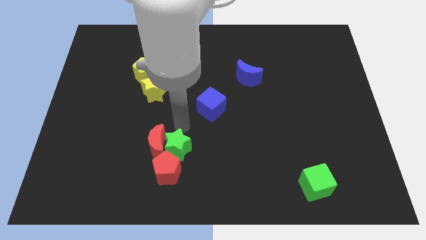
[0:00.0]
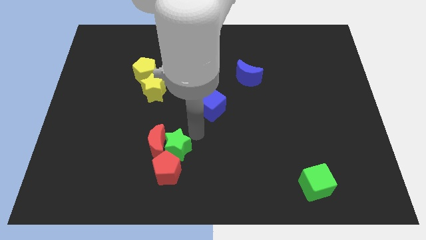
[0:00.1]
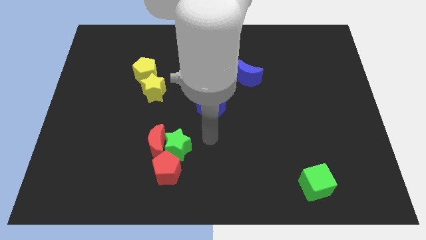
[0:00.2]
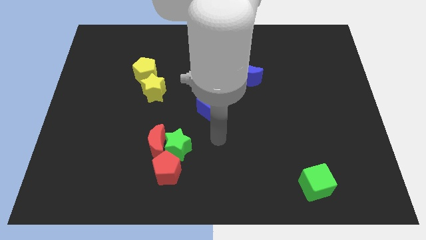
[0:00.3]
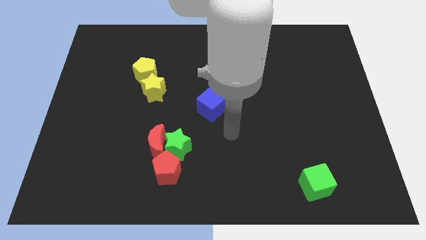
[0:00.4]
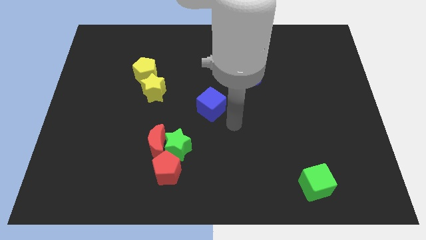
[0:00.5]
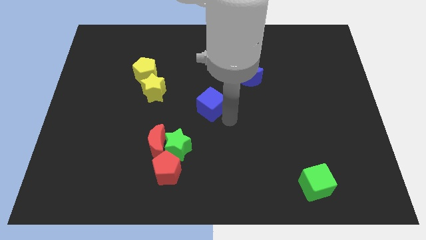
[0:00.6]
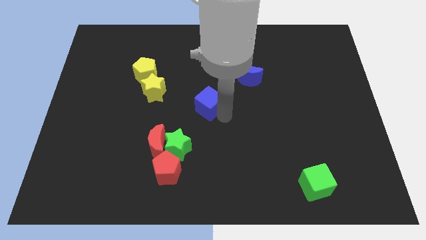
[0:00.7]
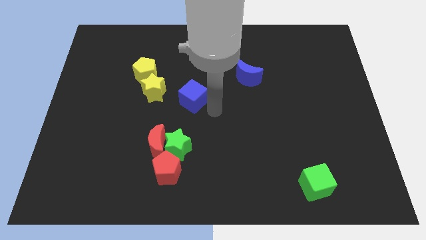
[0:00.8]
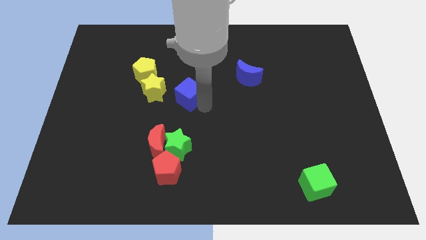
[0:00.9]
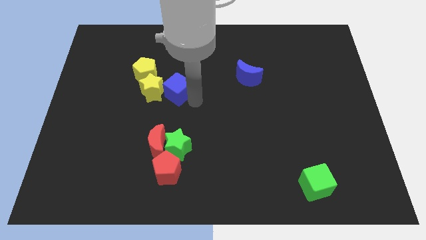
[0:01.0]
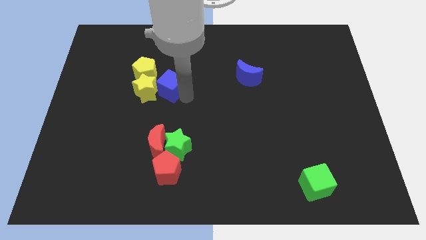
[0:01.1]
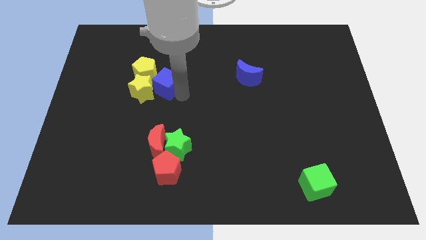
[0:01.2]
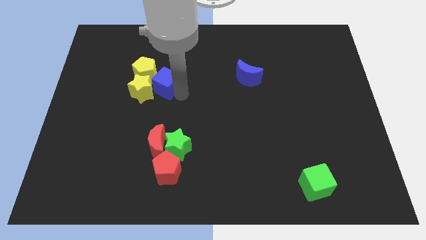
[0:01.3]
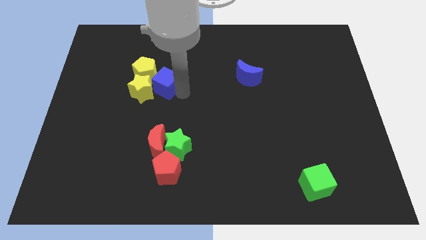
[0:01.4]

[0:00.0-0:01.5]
move the blue cube in to yellow star

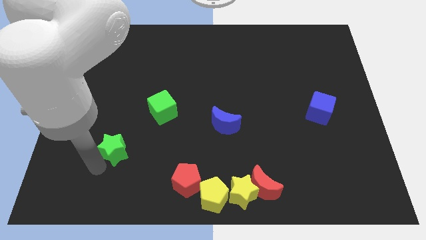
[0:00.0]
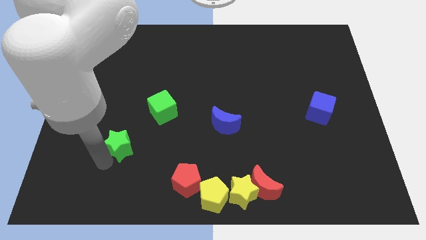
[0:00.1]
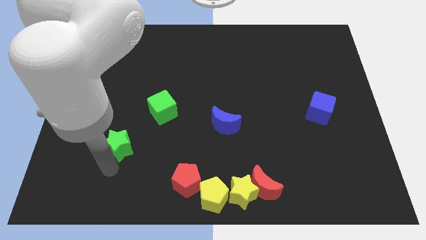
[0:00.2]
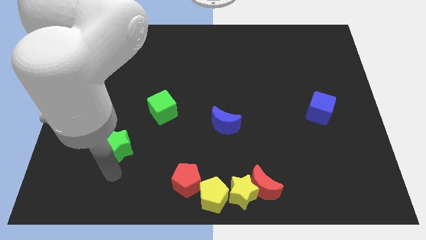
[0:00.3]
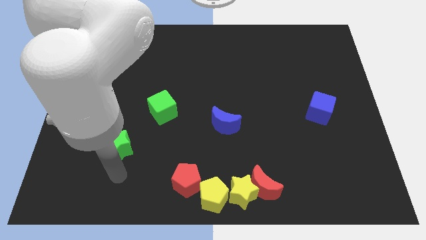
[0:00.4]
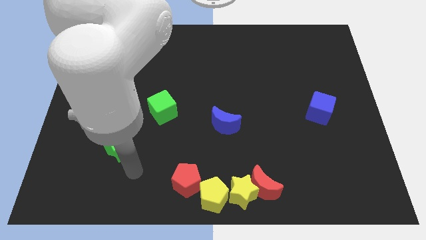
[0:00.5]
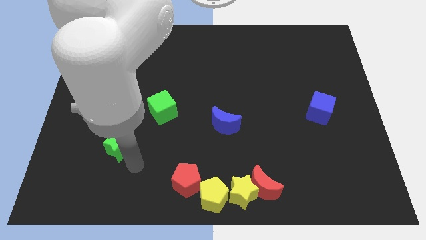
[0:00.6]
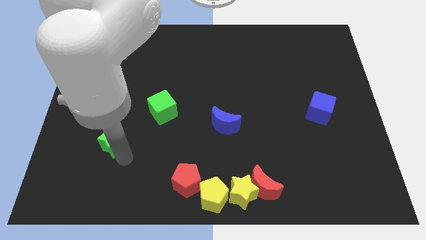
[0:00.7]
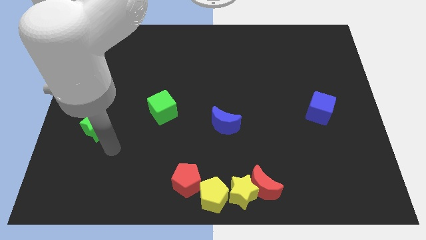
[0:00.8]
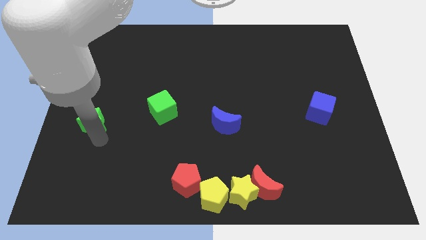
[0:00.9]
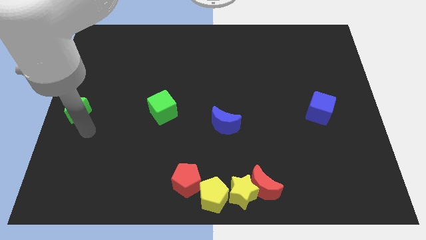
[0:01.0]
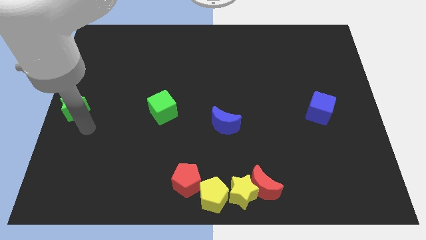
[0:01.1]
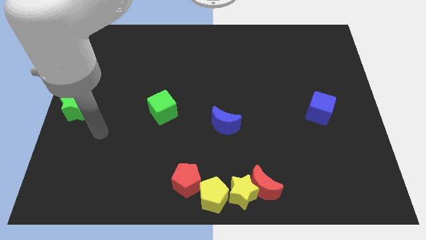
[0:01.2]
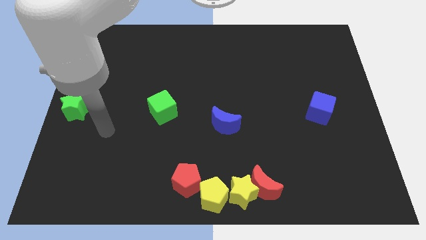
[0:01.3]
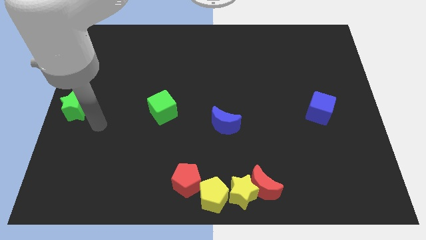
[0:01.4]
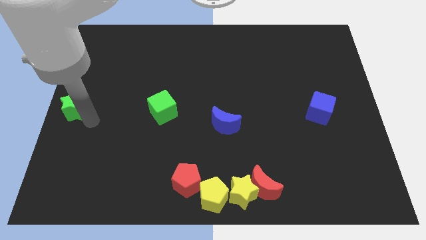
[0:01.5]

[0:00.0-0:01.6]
place the green star left to the green cube

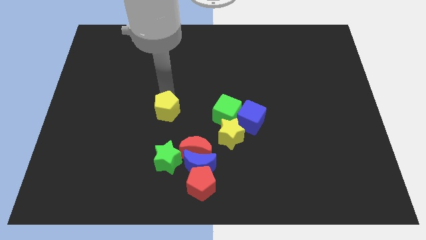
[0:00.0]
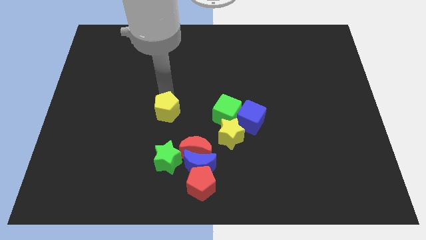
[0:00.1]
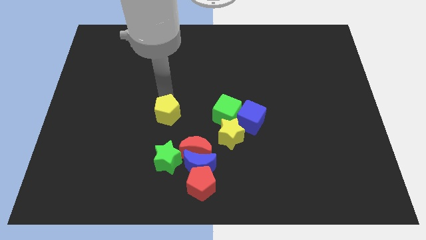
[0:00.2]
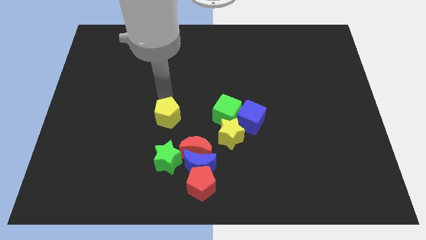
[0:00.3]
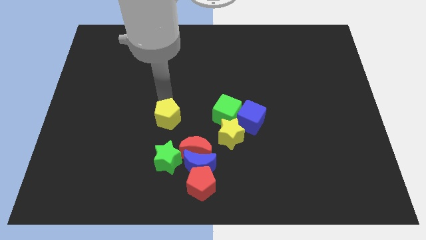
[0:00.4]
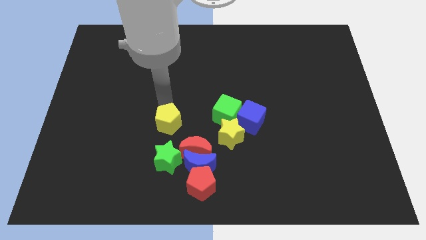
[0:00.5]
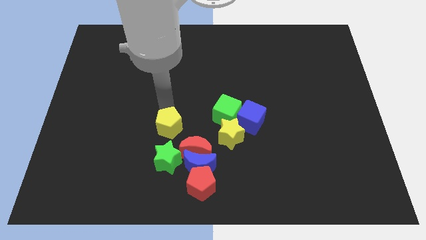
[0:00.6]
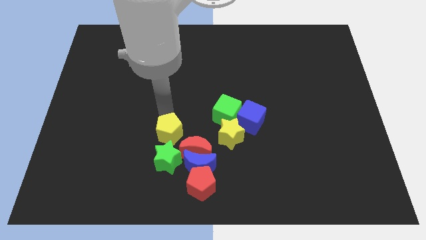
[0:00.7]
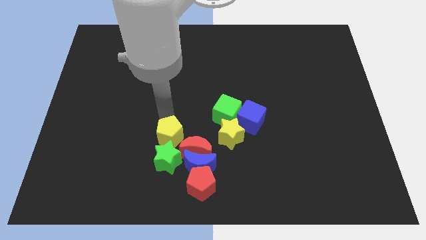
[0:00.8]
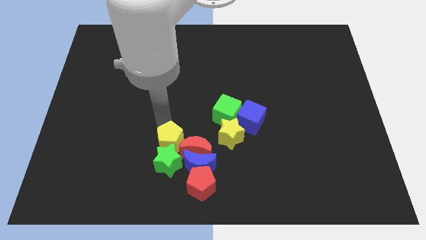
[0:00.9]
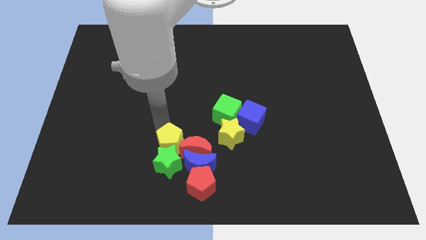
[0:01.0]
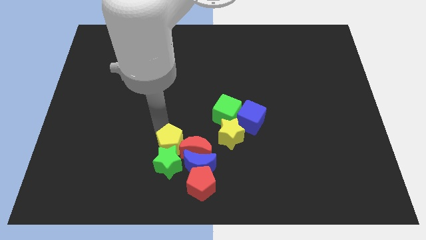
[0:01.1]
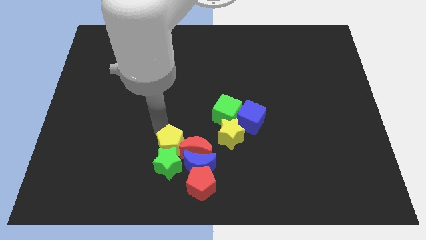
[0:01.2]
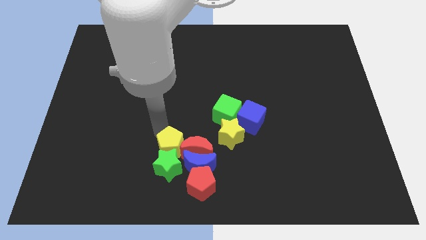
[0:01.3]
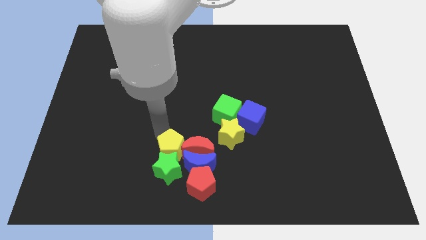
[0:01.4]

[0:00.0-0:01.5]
move the yellow pentagon into the green star

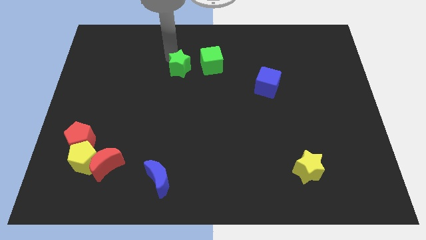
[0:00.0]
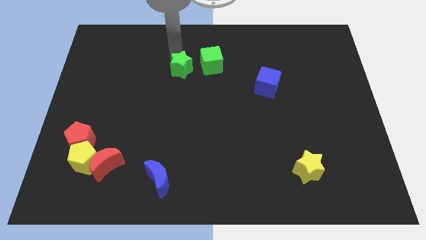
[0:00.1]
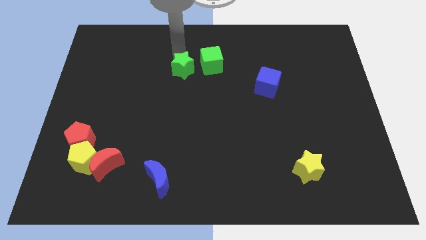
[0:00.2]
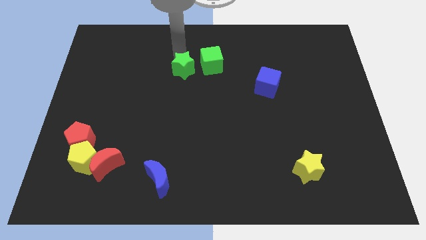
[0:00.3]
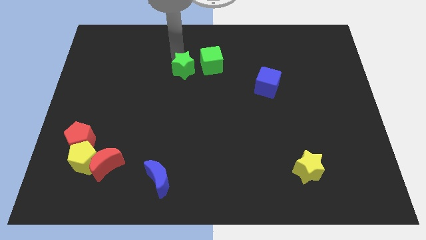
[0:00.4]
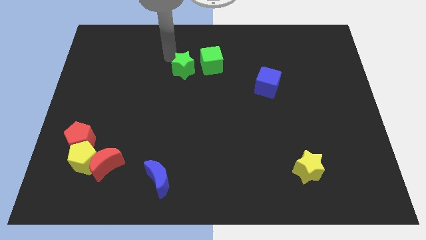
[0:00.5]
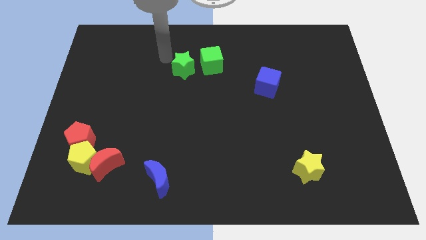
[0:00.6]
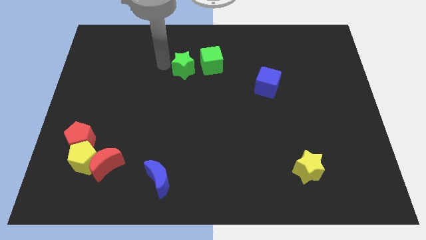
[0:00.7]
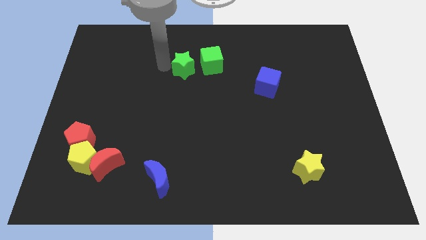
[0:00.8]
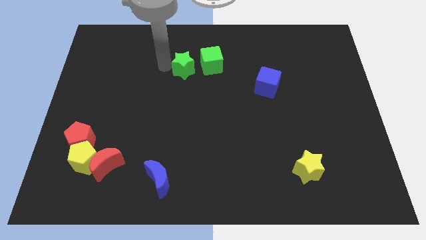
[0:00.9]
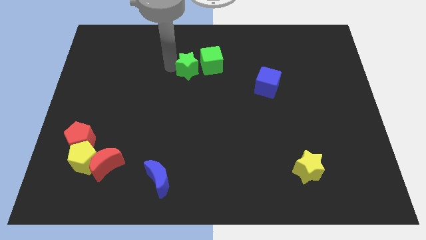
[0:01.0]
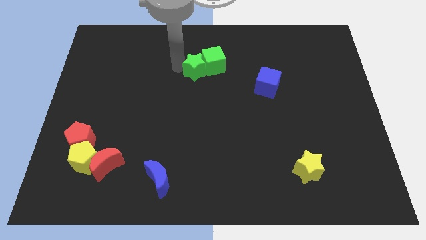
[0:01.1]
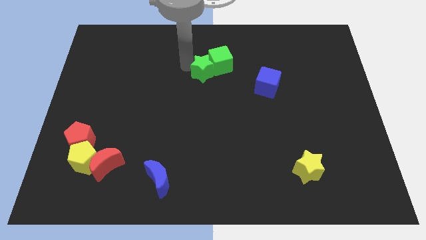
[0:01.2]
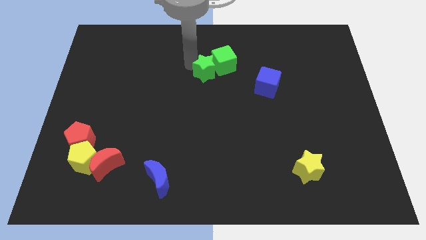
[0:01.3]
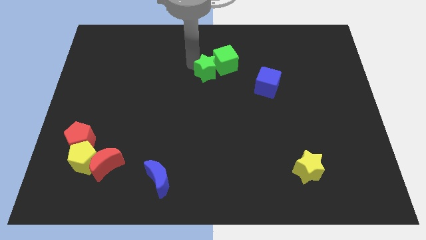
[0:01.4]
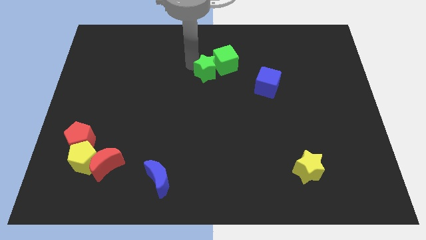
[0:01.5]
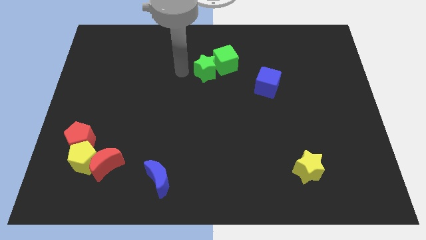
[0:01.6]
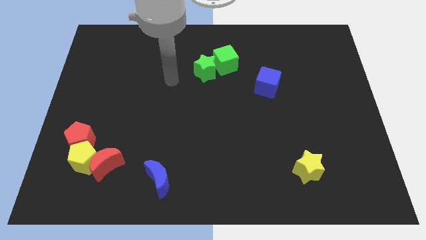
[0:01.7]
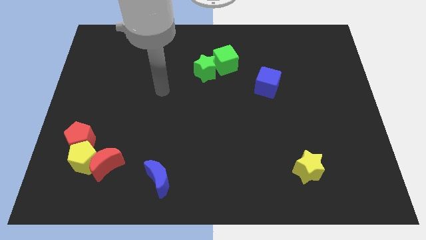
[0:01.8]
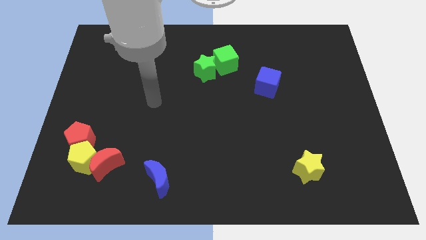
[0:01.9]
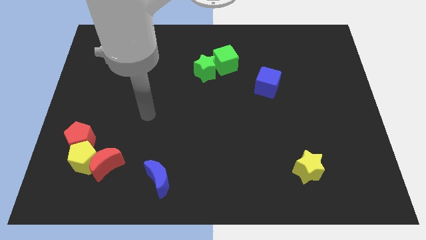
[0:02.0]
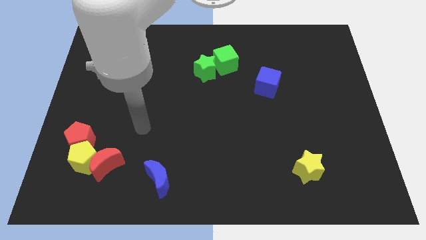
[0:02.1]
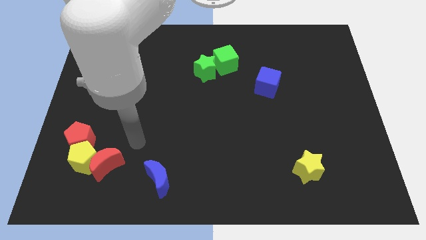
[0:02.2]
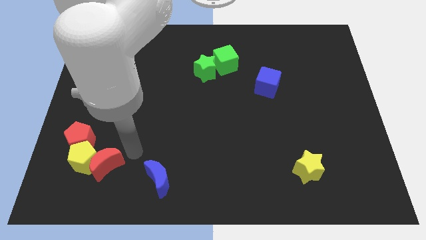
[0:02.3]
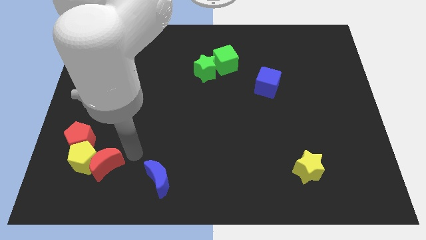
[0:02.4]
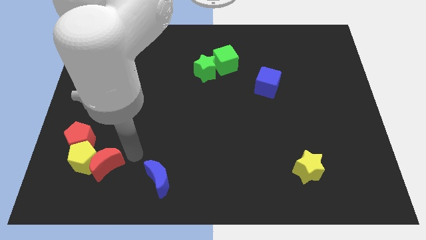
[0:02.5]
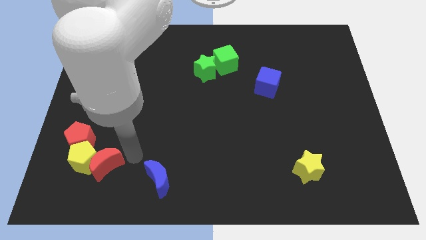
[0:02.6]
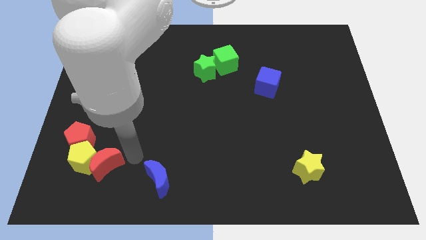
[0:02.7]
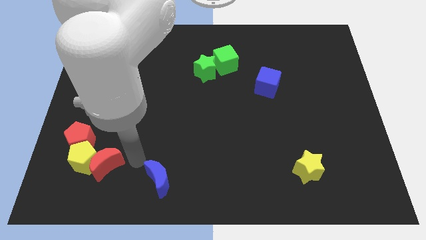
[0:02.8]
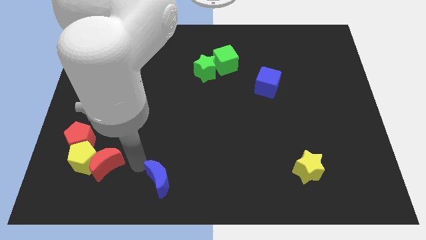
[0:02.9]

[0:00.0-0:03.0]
slightly move green blocks towards the right of the board

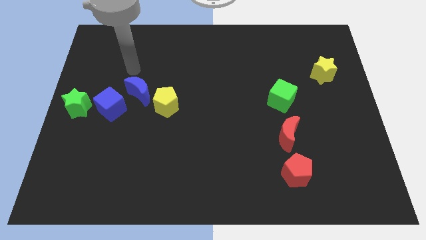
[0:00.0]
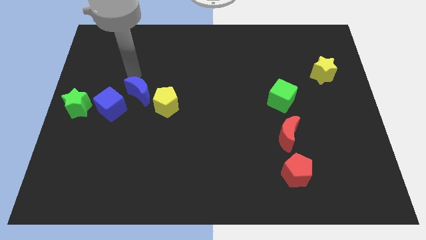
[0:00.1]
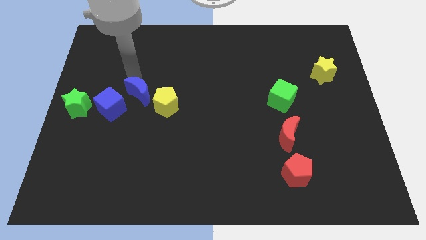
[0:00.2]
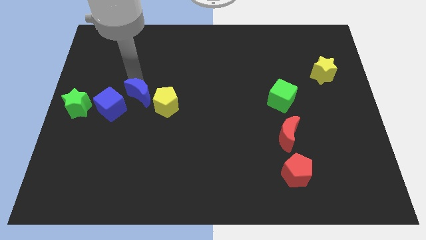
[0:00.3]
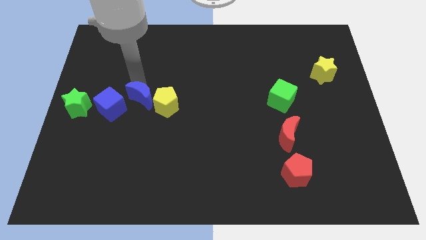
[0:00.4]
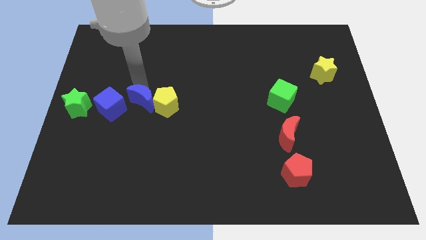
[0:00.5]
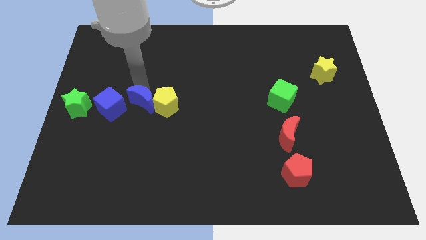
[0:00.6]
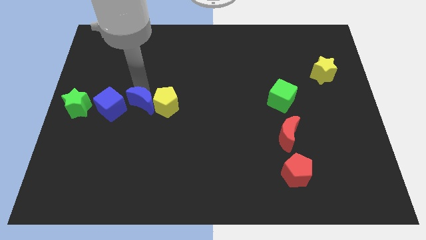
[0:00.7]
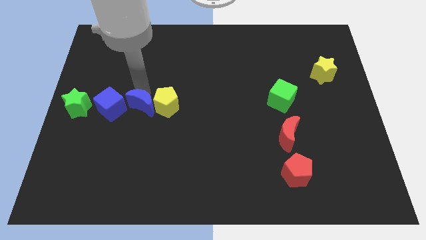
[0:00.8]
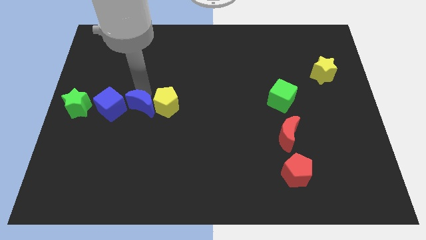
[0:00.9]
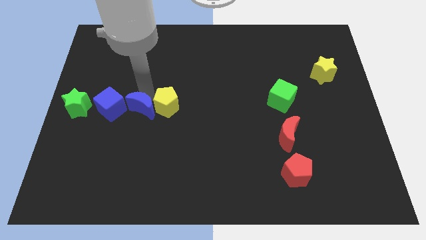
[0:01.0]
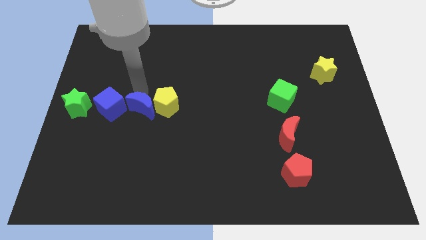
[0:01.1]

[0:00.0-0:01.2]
place the blue crescent in between the blue cube and yellow pentagon
